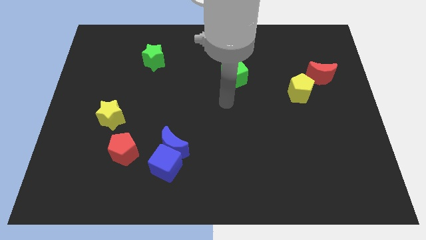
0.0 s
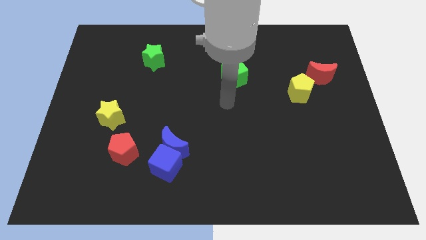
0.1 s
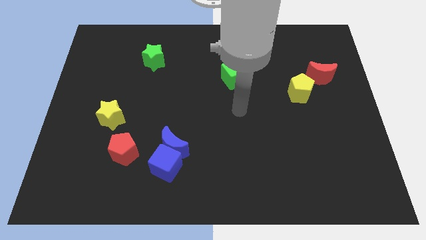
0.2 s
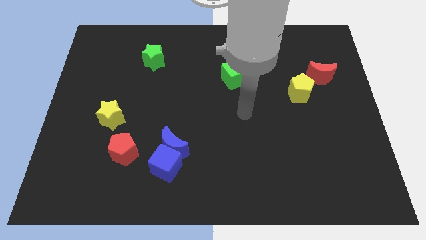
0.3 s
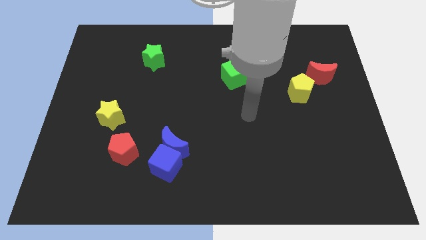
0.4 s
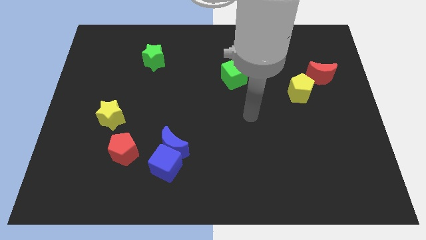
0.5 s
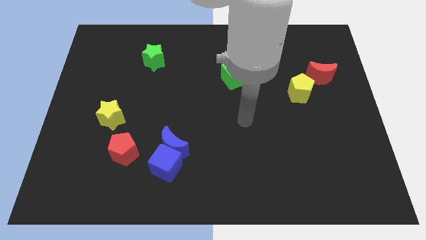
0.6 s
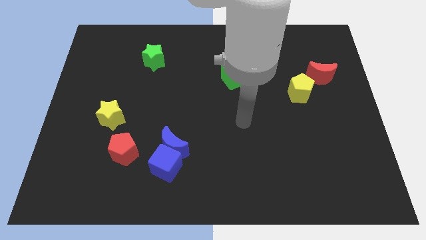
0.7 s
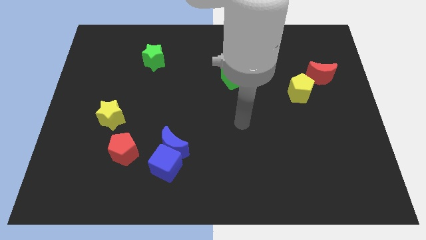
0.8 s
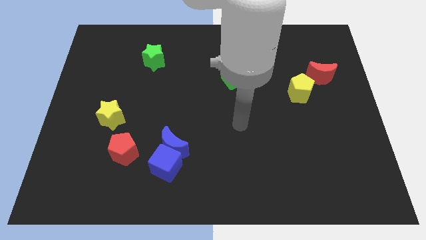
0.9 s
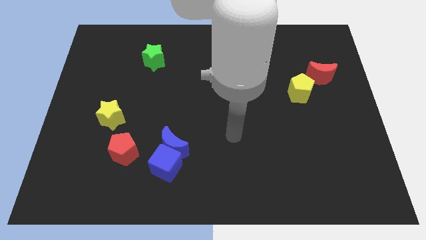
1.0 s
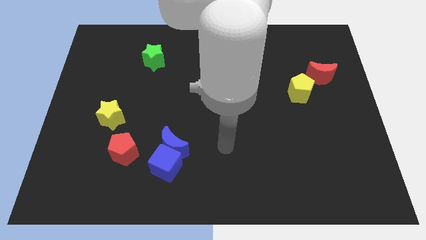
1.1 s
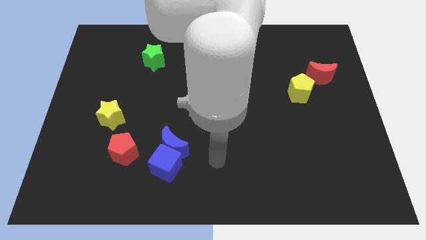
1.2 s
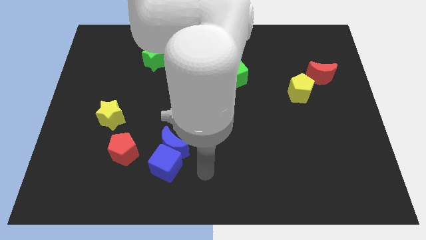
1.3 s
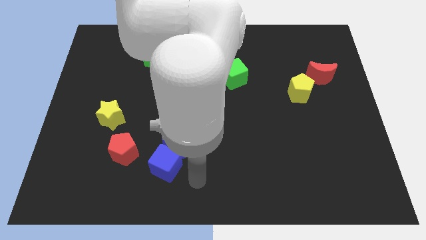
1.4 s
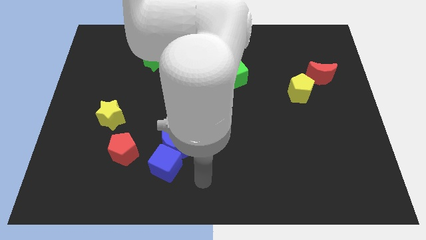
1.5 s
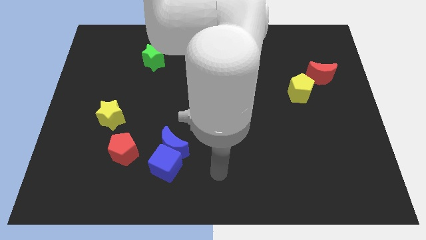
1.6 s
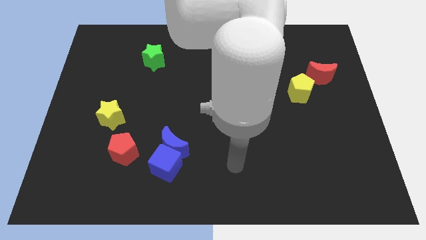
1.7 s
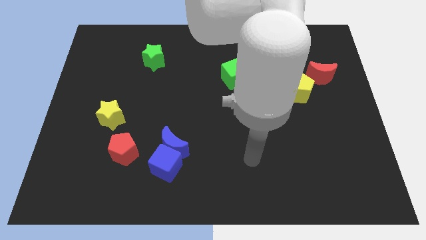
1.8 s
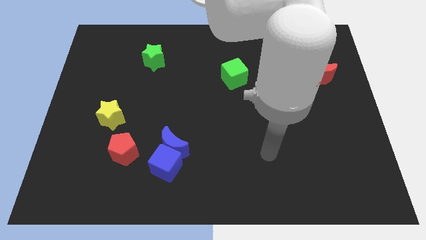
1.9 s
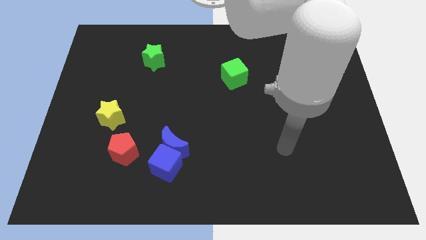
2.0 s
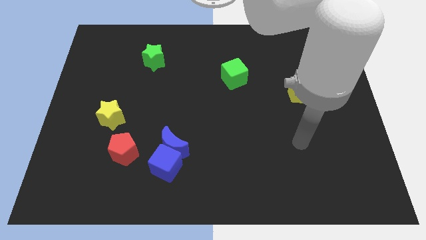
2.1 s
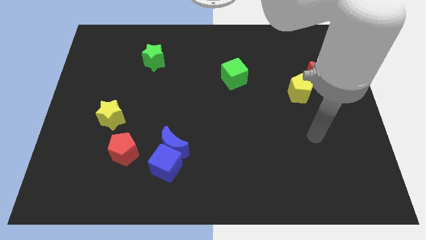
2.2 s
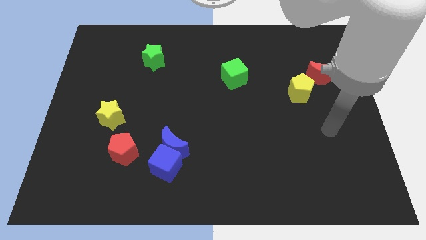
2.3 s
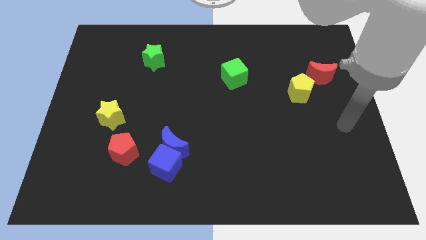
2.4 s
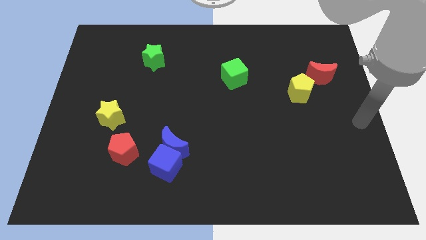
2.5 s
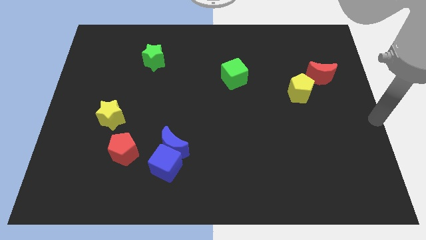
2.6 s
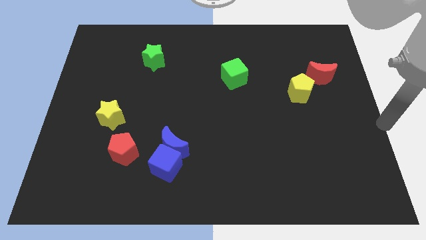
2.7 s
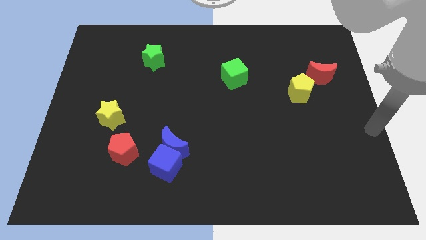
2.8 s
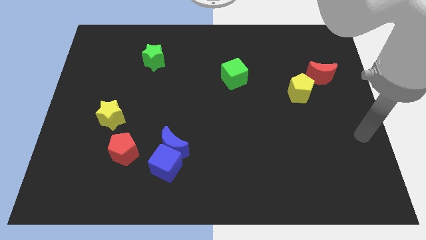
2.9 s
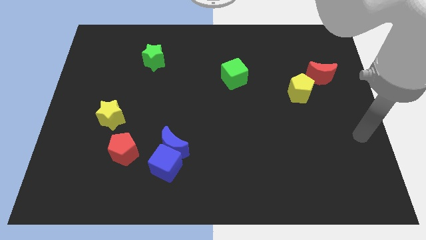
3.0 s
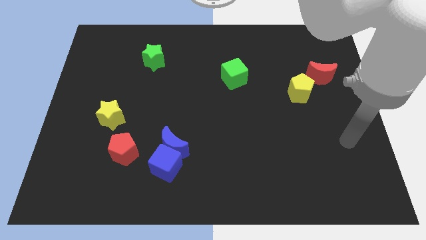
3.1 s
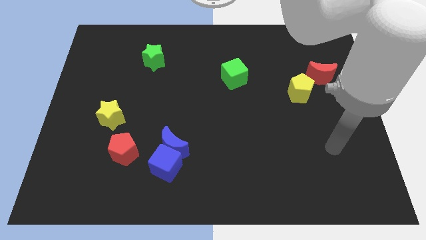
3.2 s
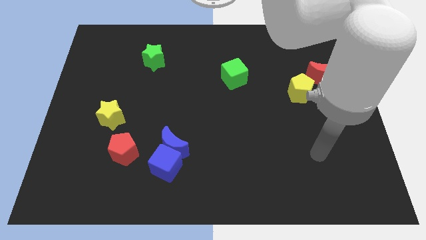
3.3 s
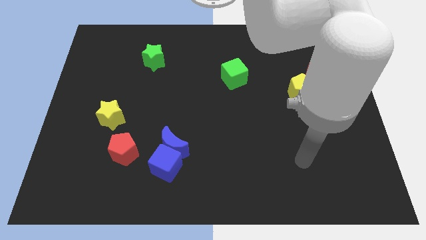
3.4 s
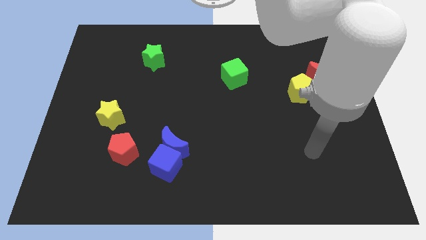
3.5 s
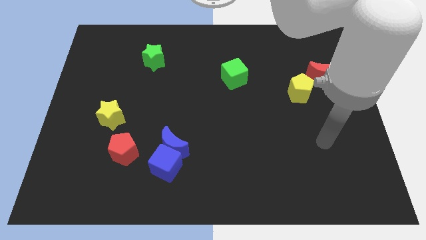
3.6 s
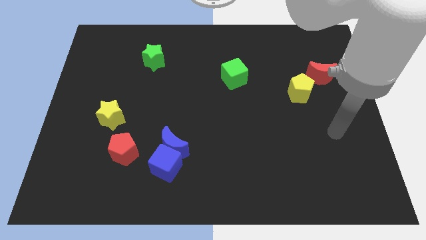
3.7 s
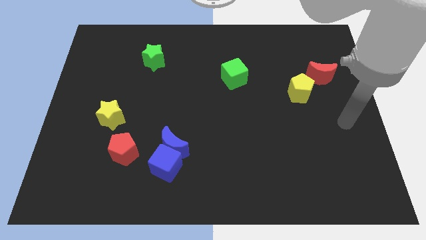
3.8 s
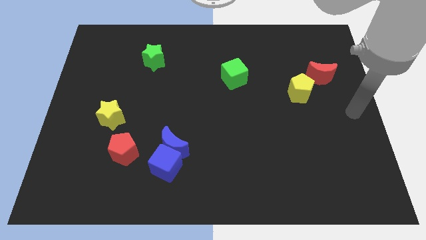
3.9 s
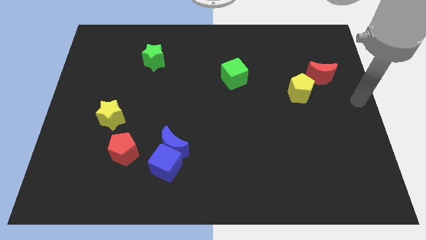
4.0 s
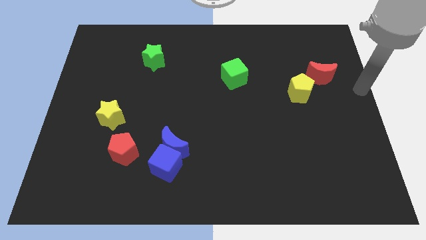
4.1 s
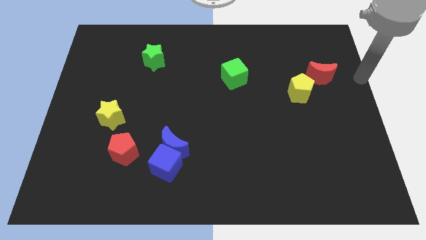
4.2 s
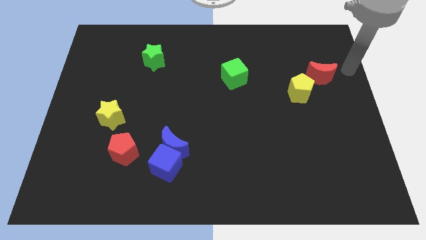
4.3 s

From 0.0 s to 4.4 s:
point the arm to the right of the red moon

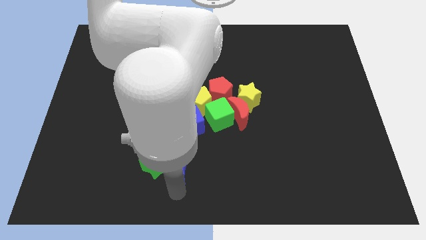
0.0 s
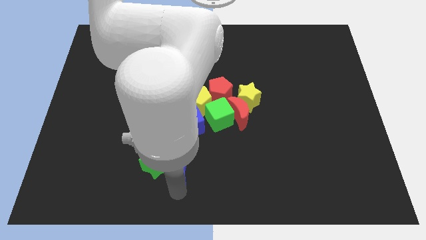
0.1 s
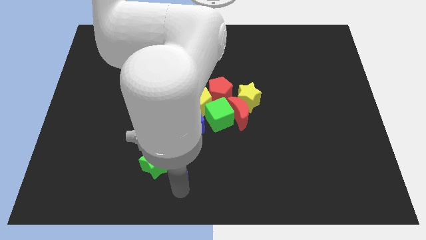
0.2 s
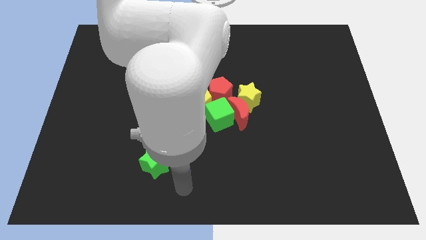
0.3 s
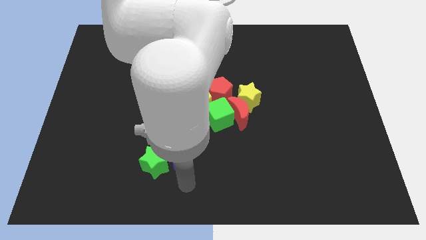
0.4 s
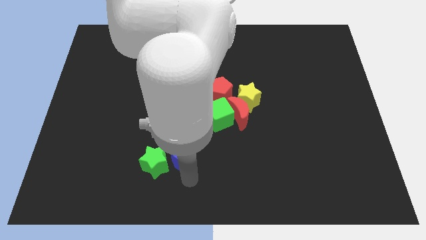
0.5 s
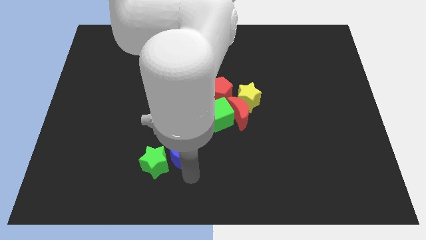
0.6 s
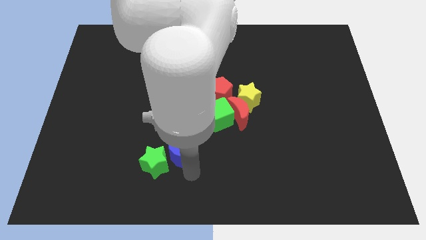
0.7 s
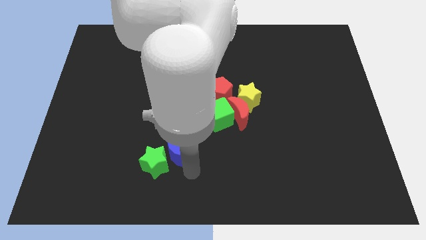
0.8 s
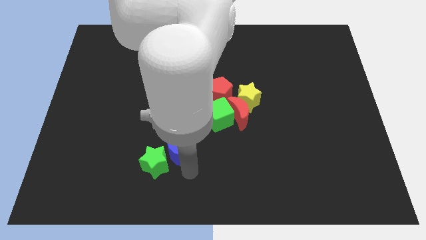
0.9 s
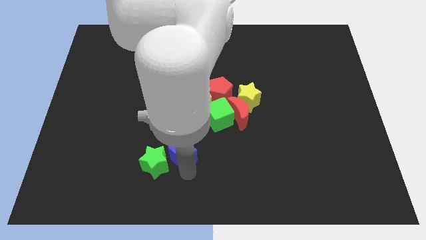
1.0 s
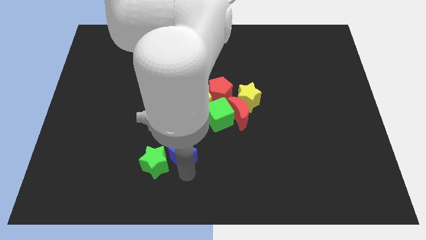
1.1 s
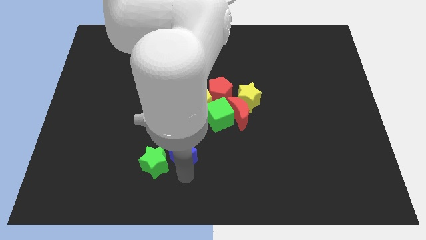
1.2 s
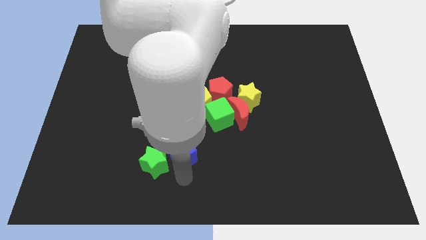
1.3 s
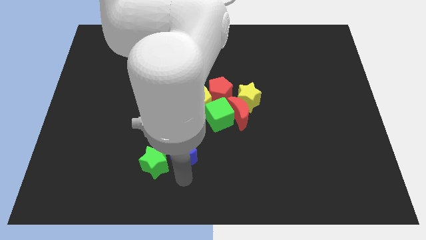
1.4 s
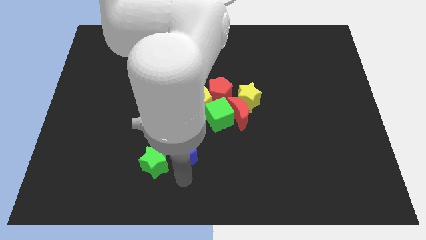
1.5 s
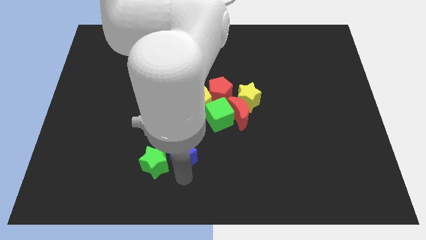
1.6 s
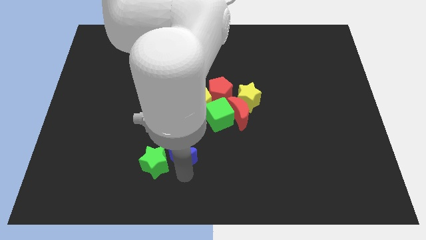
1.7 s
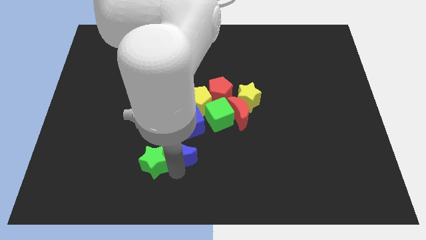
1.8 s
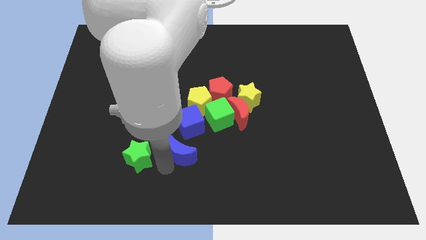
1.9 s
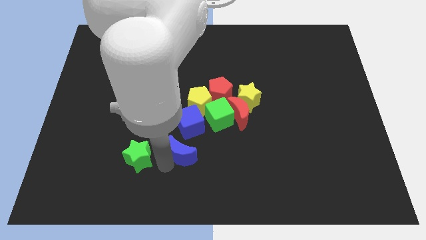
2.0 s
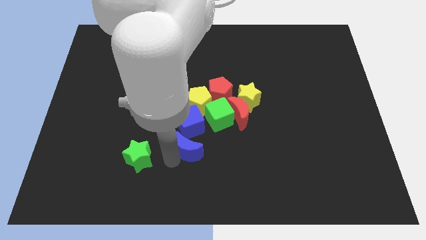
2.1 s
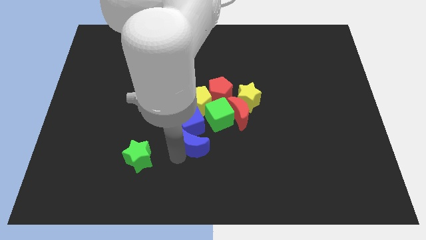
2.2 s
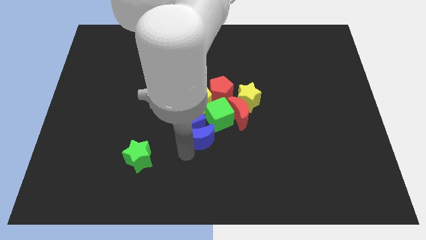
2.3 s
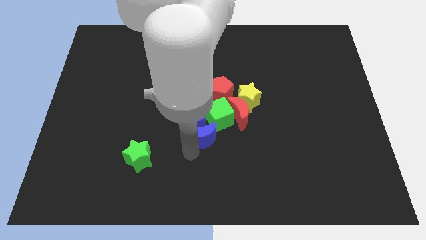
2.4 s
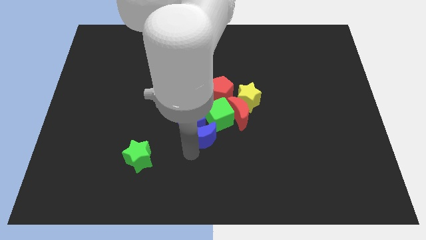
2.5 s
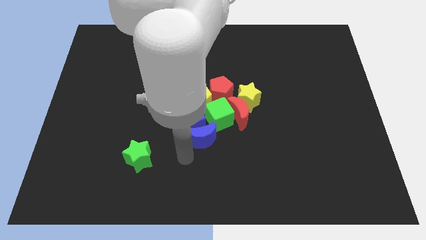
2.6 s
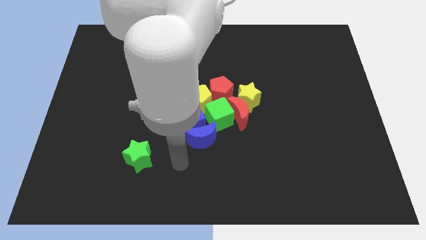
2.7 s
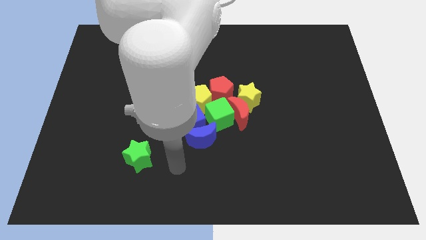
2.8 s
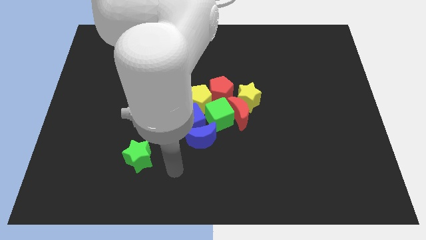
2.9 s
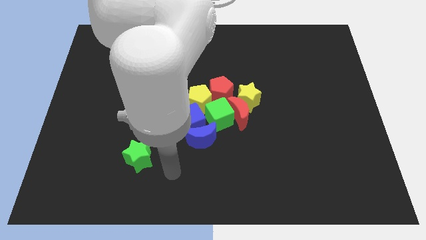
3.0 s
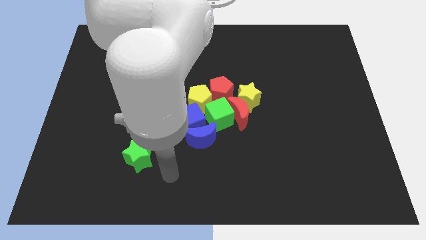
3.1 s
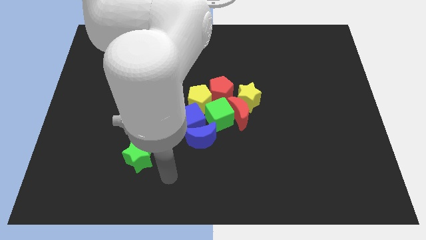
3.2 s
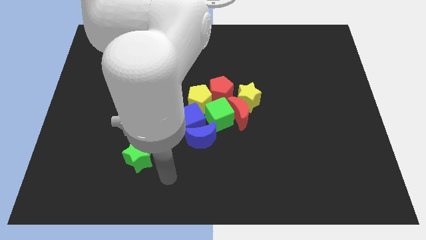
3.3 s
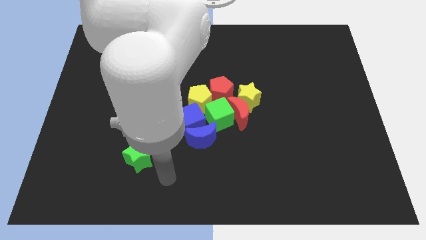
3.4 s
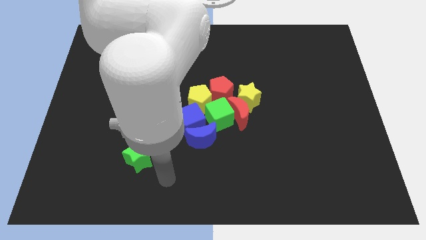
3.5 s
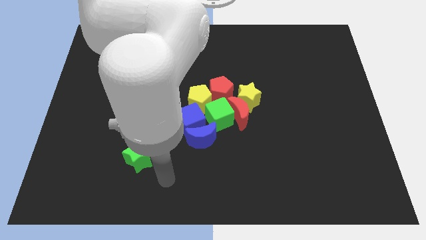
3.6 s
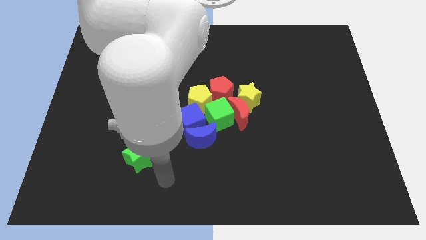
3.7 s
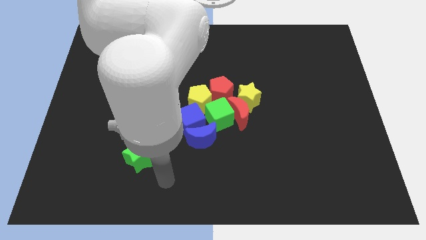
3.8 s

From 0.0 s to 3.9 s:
move the blue moon to bottom of blue cube

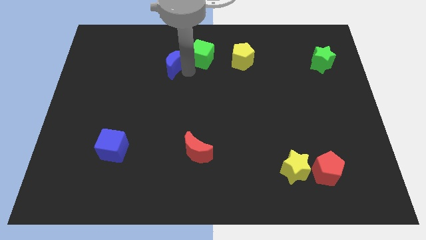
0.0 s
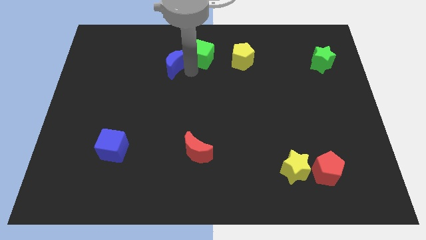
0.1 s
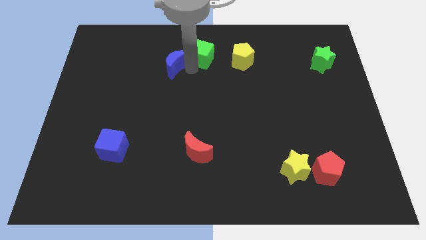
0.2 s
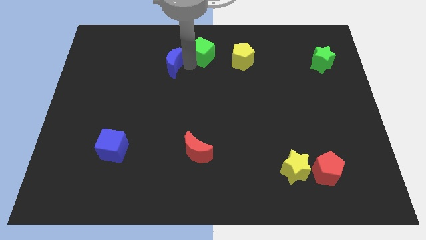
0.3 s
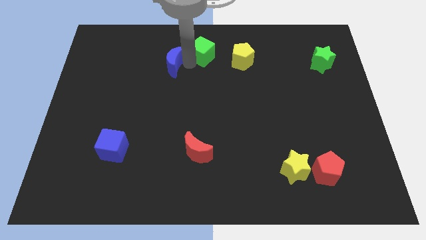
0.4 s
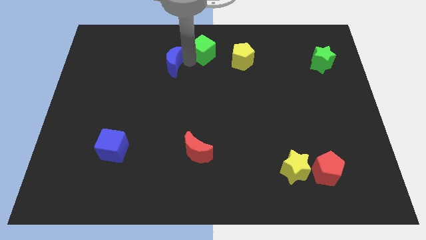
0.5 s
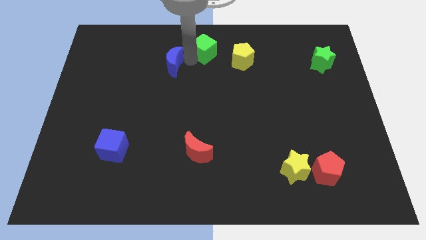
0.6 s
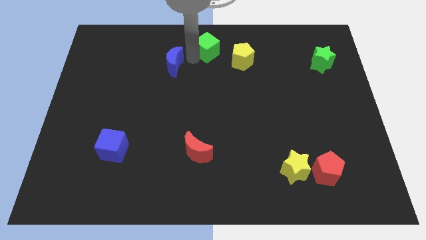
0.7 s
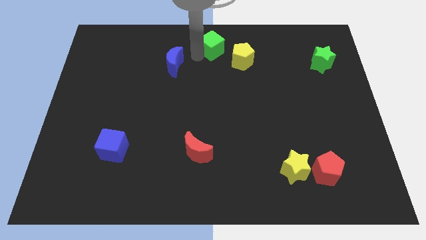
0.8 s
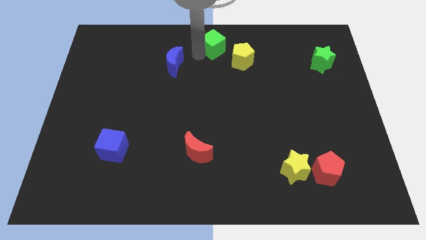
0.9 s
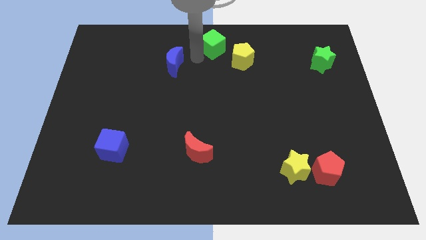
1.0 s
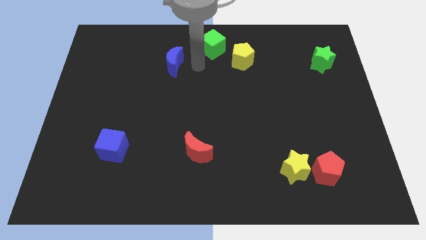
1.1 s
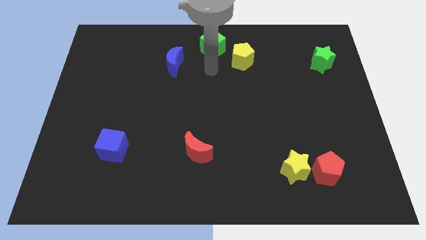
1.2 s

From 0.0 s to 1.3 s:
separate the green cube from blue crescent
